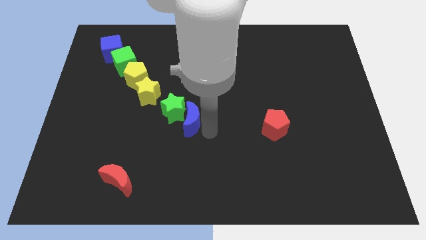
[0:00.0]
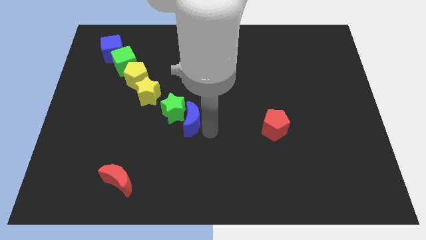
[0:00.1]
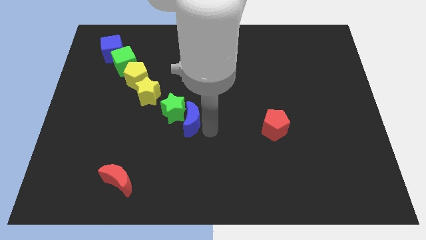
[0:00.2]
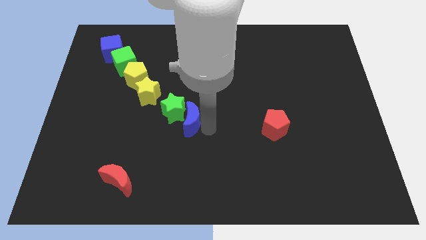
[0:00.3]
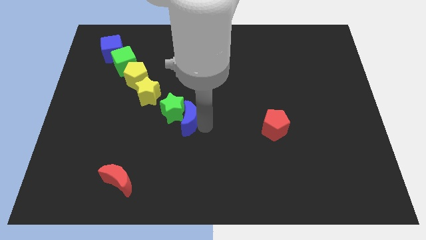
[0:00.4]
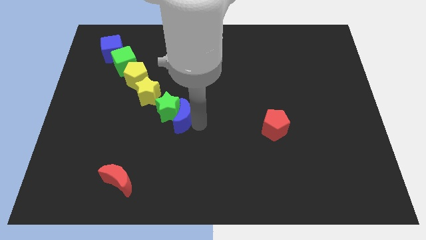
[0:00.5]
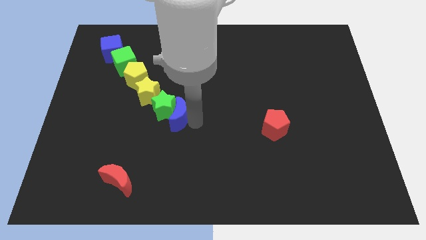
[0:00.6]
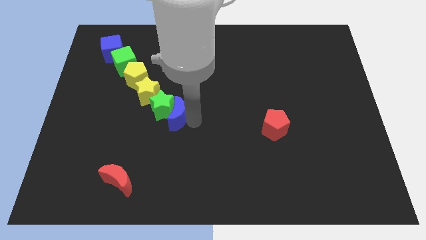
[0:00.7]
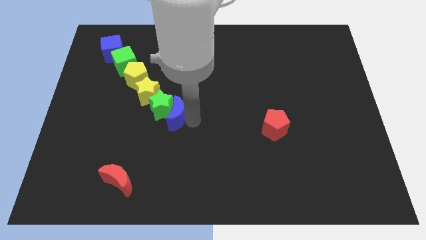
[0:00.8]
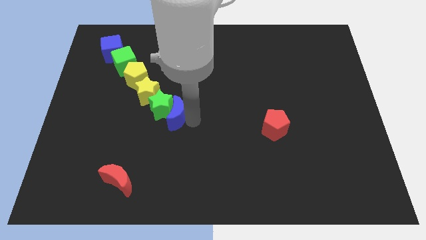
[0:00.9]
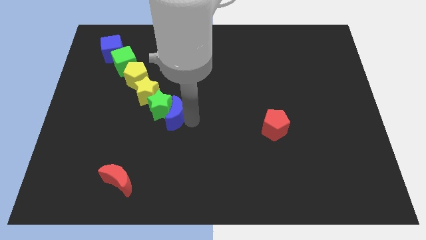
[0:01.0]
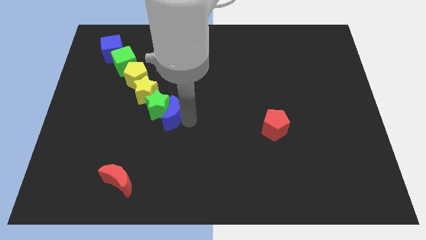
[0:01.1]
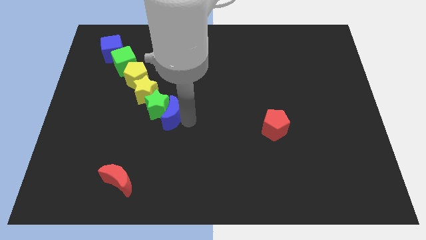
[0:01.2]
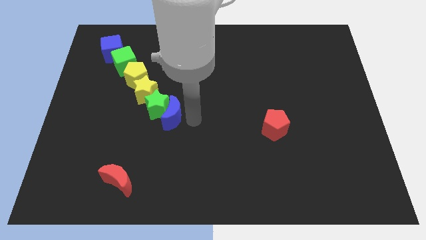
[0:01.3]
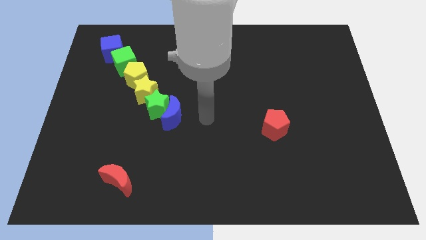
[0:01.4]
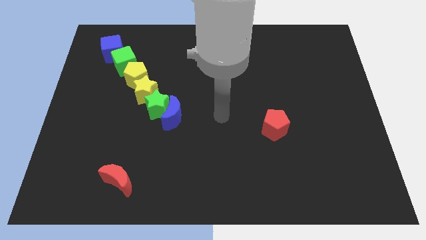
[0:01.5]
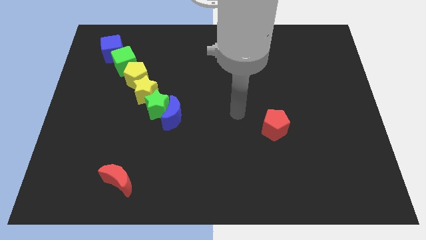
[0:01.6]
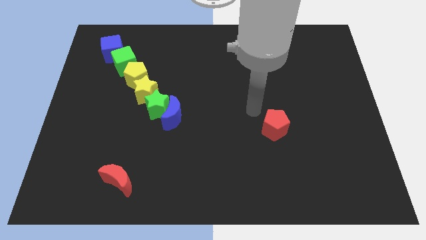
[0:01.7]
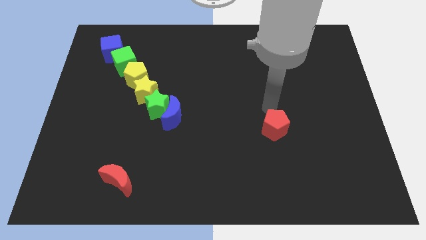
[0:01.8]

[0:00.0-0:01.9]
push the green star and blue moon into the yellow star

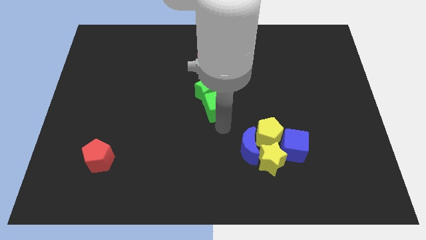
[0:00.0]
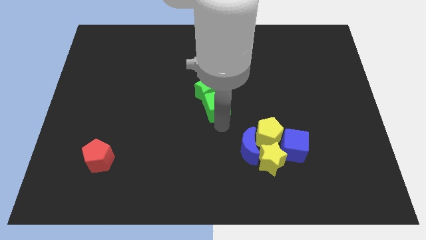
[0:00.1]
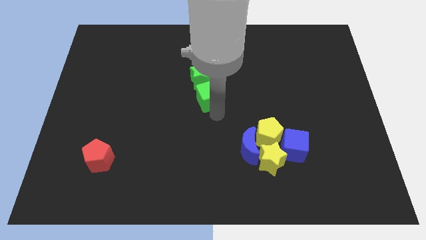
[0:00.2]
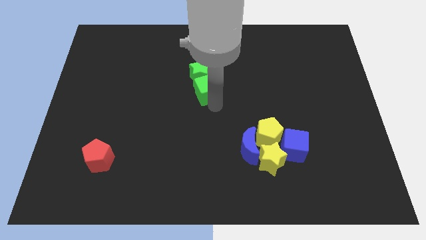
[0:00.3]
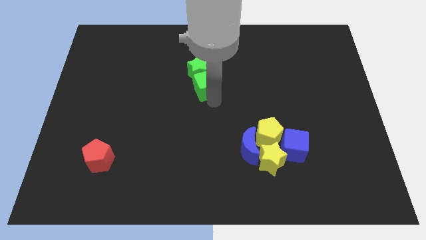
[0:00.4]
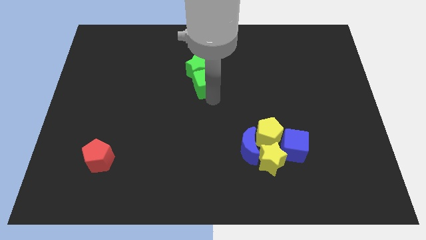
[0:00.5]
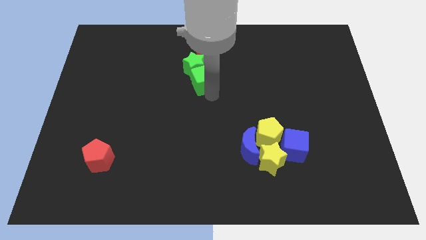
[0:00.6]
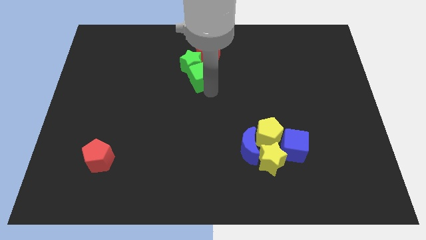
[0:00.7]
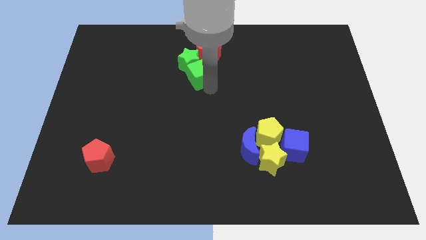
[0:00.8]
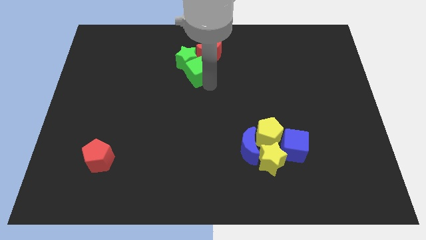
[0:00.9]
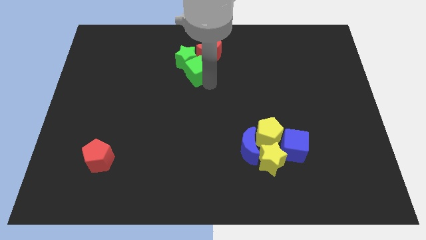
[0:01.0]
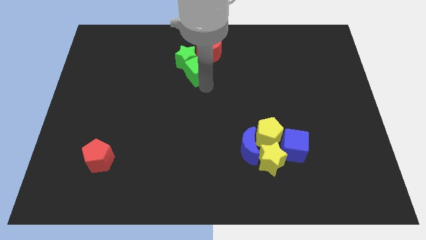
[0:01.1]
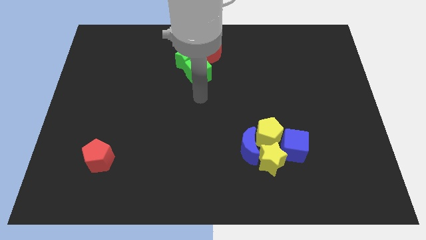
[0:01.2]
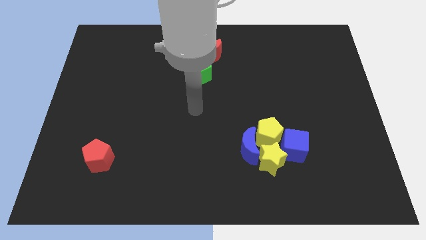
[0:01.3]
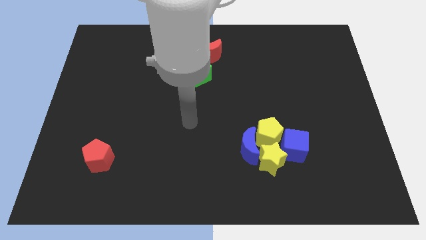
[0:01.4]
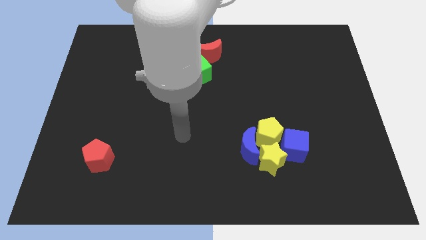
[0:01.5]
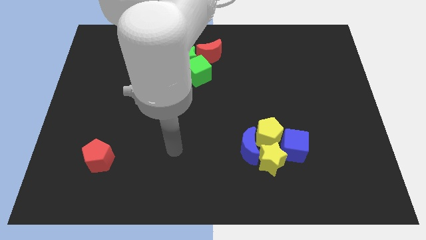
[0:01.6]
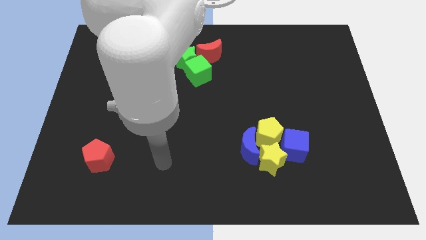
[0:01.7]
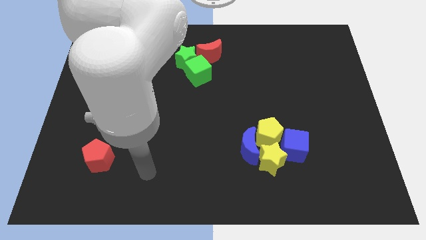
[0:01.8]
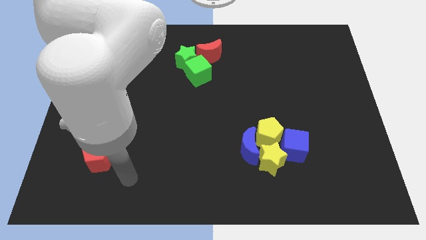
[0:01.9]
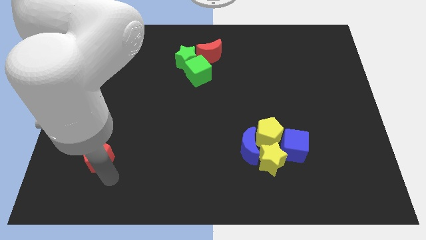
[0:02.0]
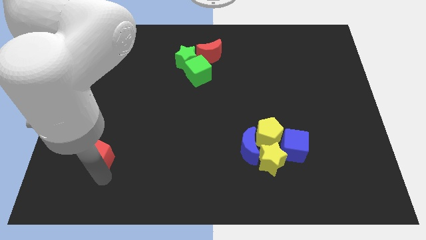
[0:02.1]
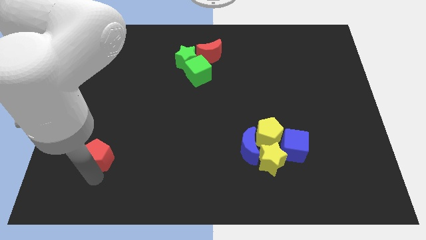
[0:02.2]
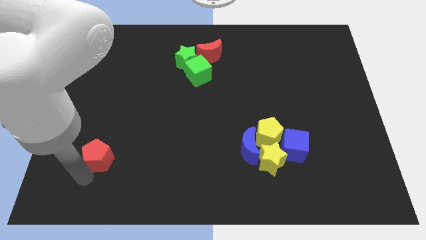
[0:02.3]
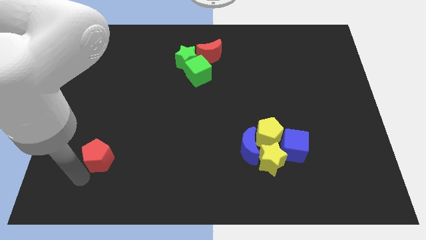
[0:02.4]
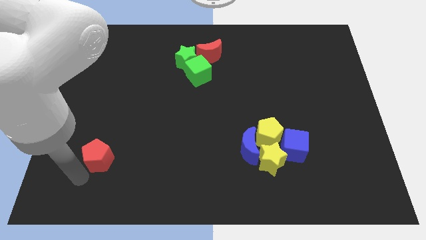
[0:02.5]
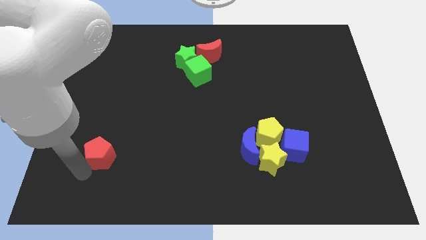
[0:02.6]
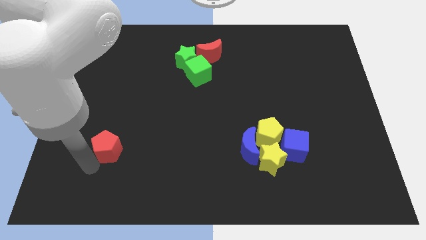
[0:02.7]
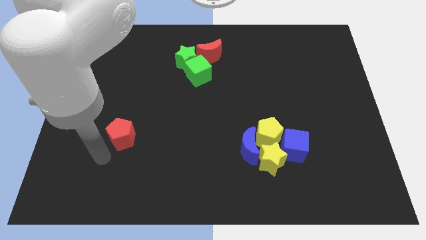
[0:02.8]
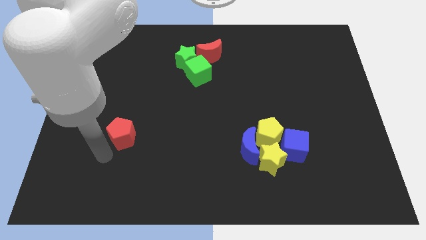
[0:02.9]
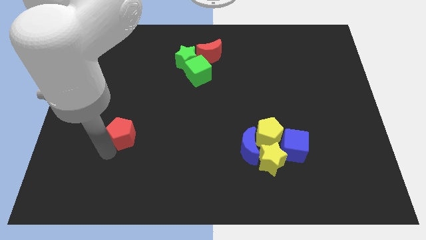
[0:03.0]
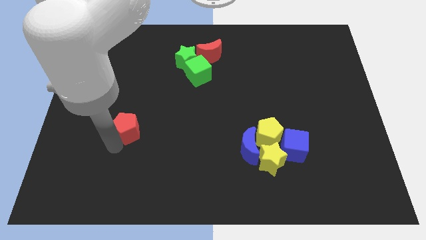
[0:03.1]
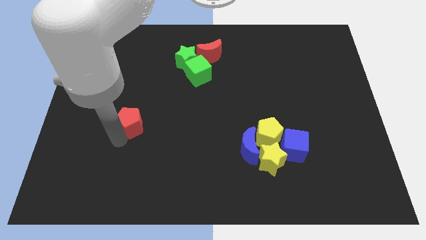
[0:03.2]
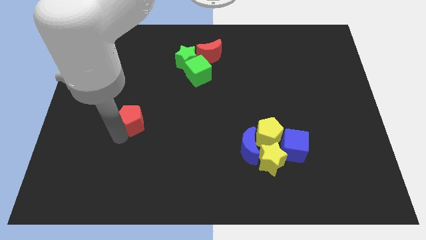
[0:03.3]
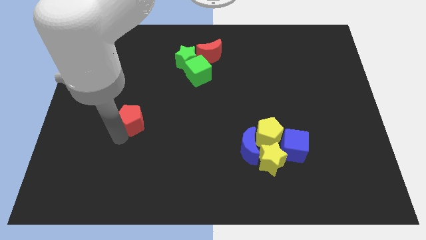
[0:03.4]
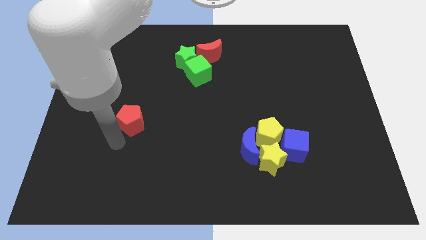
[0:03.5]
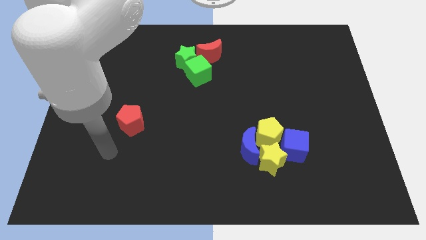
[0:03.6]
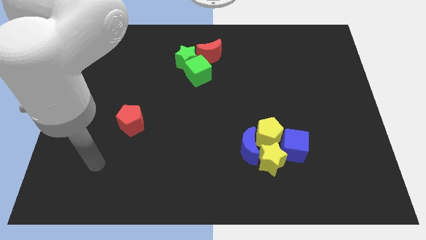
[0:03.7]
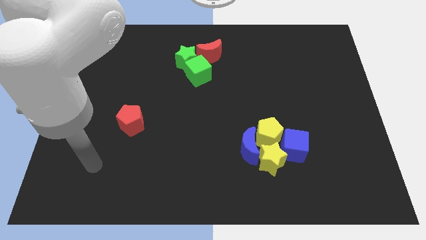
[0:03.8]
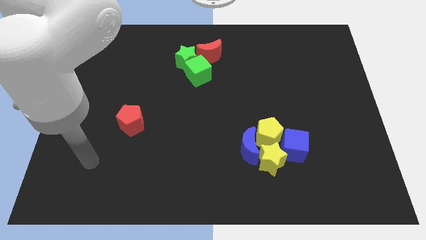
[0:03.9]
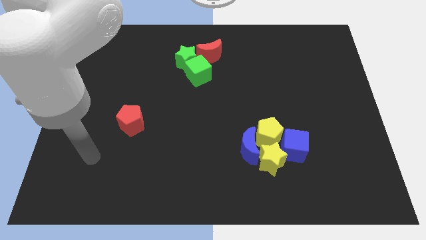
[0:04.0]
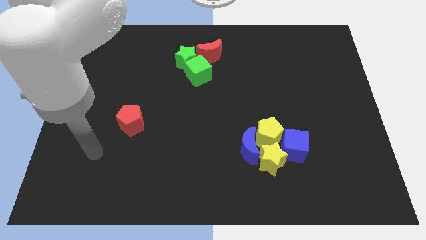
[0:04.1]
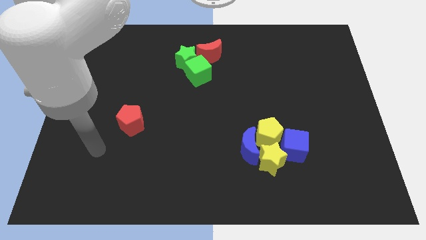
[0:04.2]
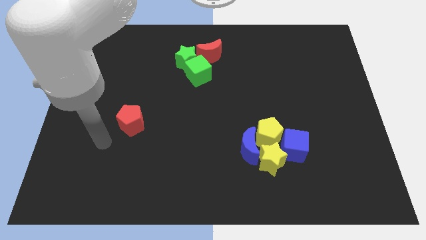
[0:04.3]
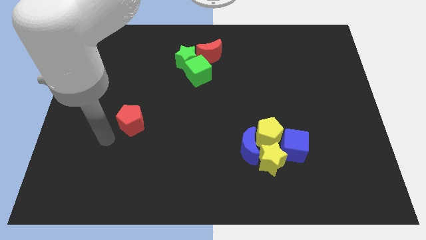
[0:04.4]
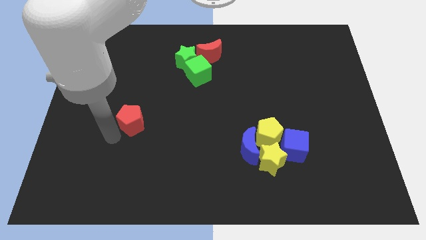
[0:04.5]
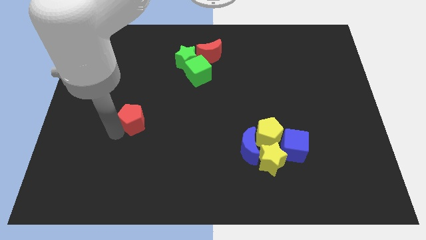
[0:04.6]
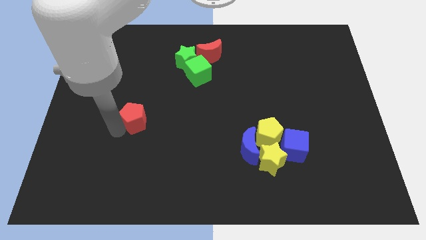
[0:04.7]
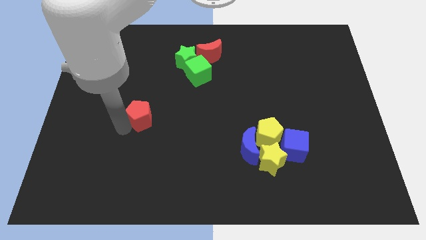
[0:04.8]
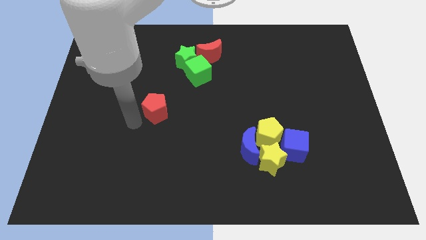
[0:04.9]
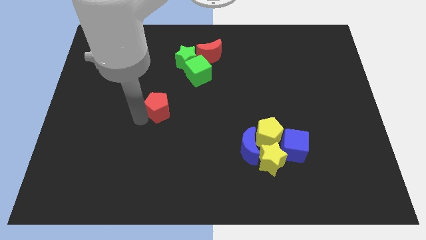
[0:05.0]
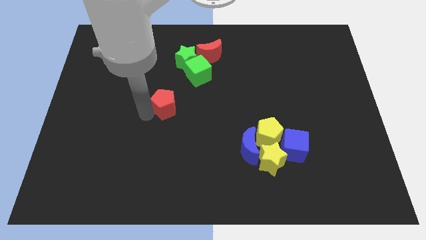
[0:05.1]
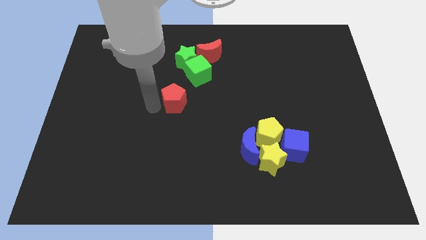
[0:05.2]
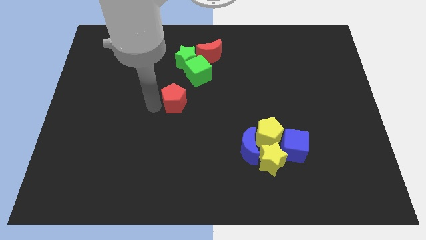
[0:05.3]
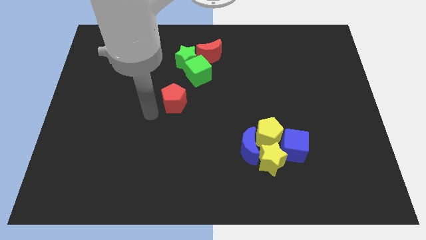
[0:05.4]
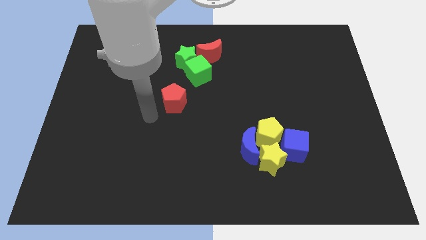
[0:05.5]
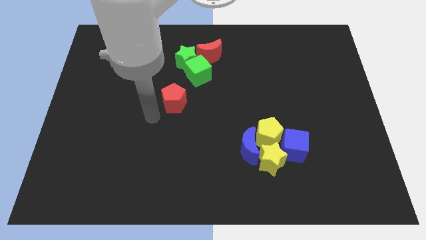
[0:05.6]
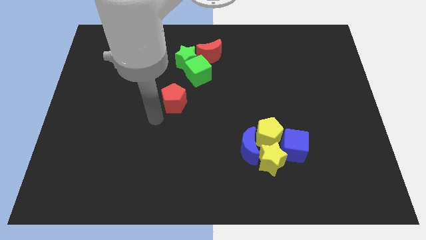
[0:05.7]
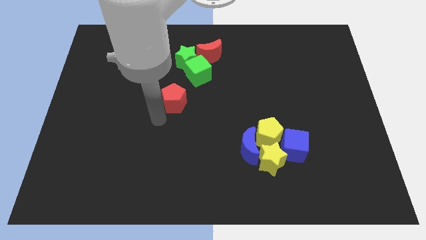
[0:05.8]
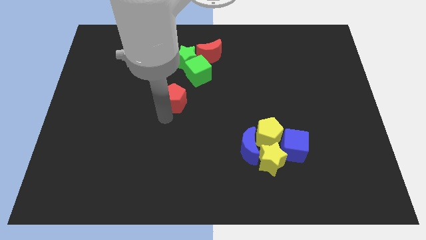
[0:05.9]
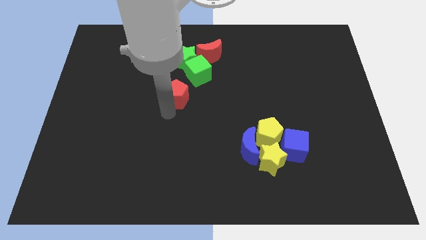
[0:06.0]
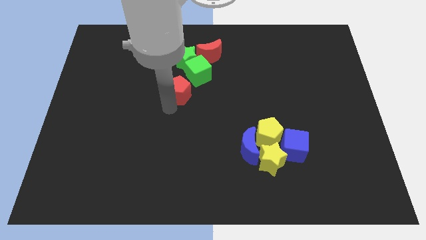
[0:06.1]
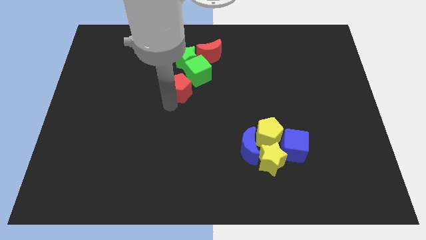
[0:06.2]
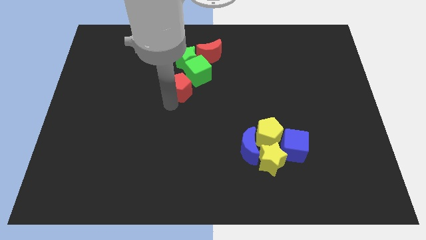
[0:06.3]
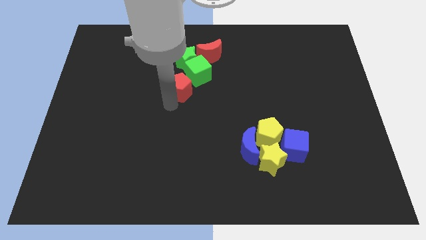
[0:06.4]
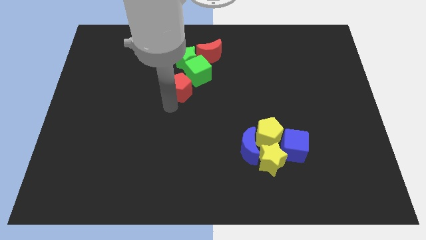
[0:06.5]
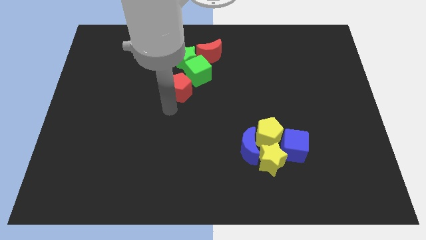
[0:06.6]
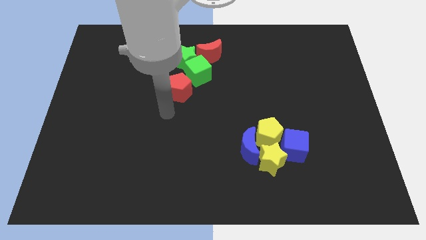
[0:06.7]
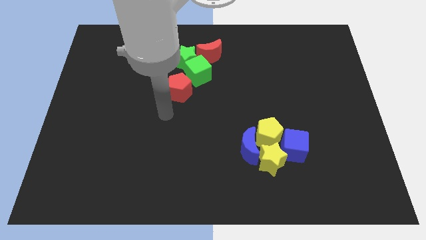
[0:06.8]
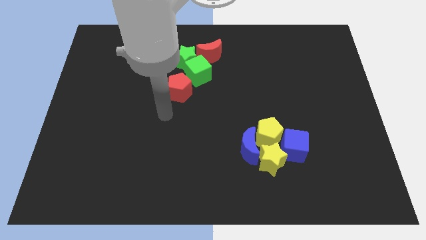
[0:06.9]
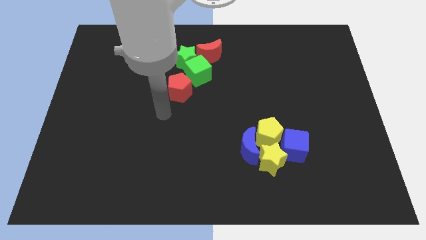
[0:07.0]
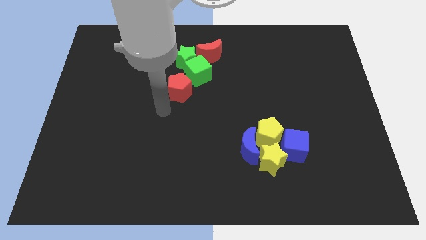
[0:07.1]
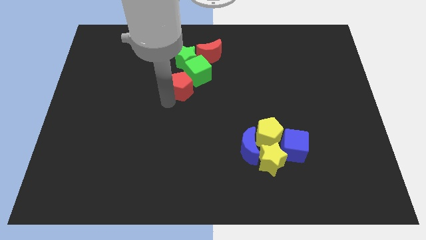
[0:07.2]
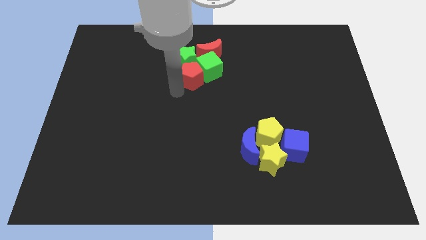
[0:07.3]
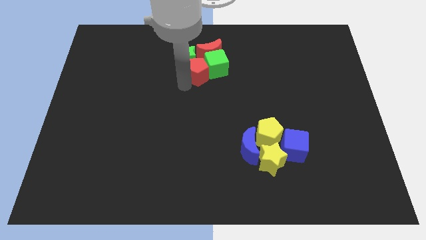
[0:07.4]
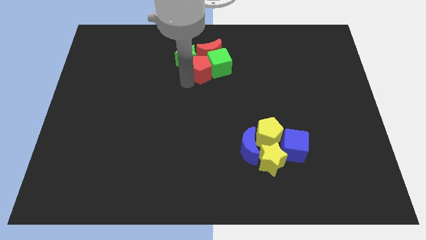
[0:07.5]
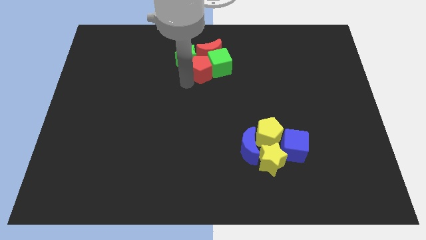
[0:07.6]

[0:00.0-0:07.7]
make a group of blocks at the top side of the table
